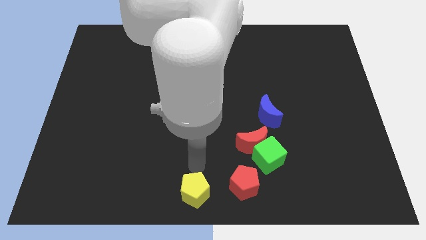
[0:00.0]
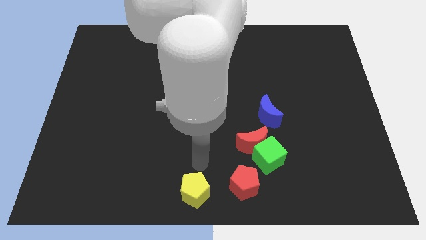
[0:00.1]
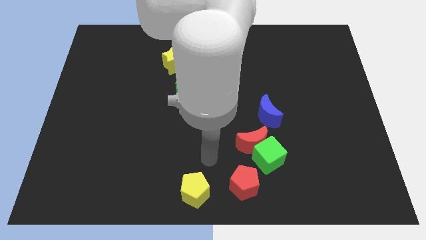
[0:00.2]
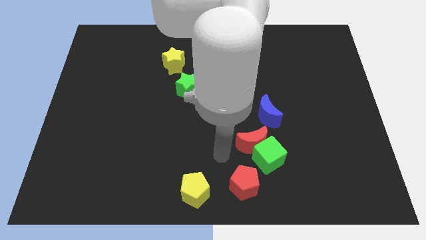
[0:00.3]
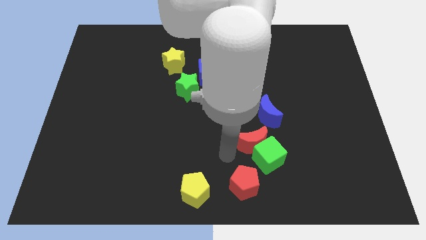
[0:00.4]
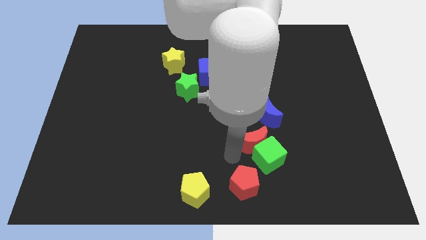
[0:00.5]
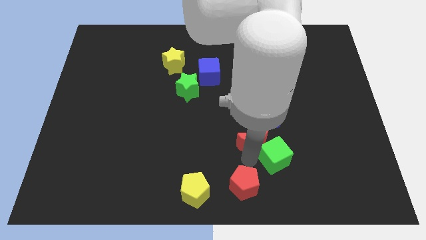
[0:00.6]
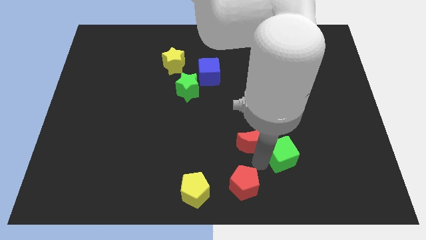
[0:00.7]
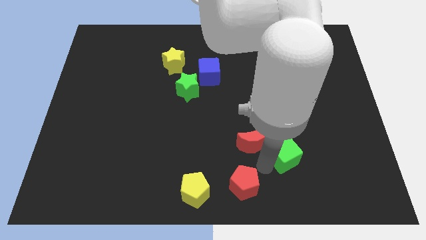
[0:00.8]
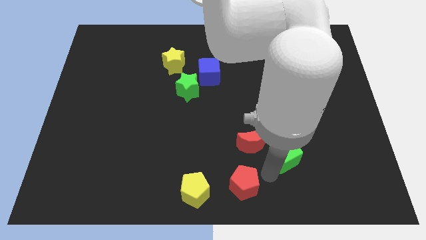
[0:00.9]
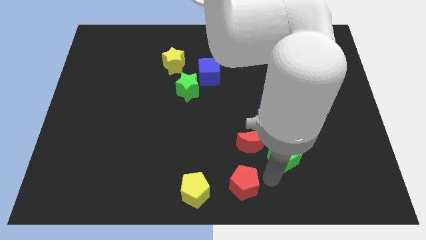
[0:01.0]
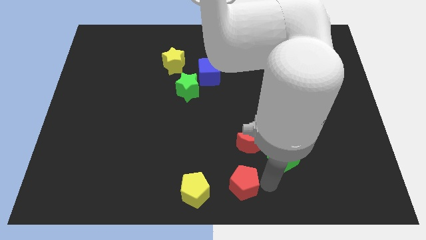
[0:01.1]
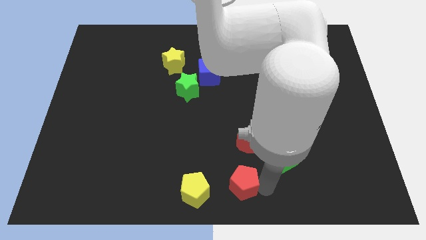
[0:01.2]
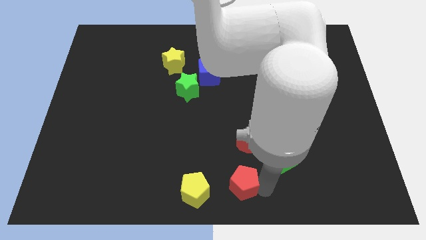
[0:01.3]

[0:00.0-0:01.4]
separate the green cube and red moon

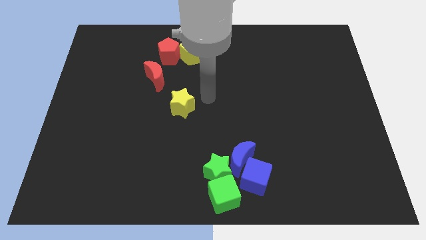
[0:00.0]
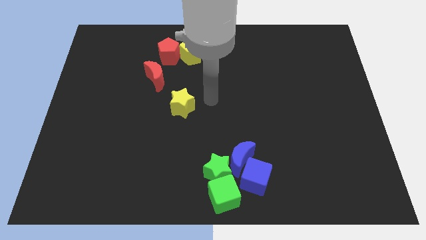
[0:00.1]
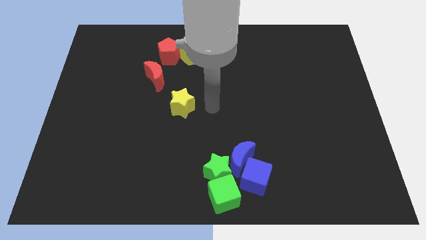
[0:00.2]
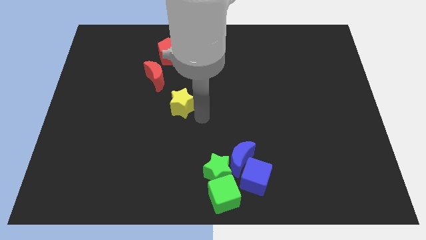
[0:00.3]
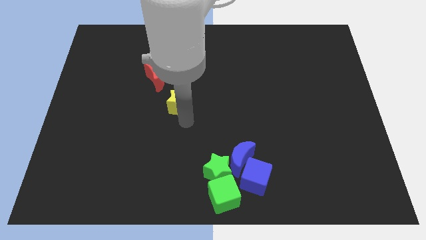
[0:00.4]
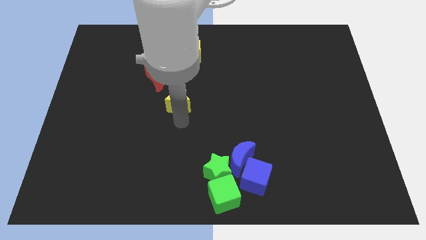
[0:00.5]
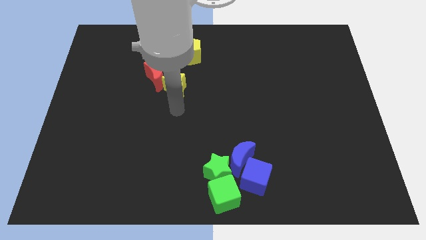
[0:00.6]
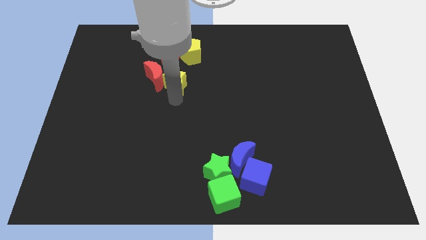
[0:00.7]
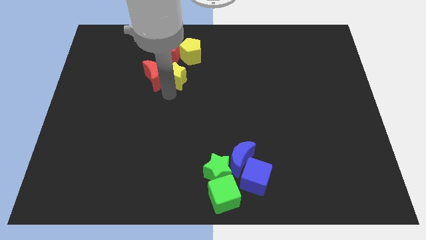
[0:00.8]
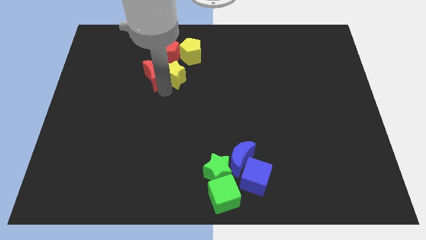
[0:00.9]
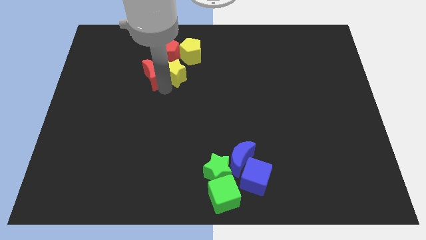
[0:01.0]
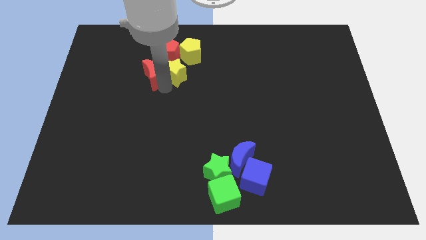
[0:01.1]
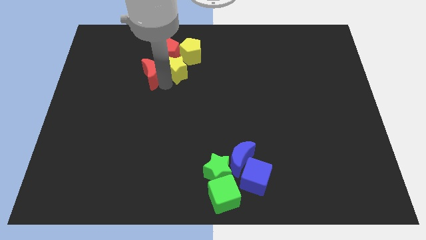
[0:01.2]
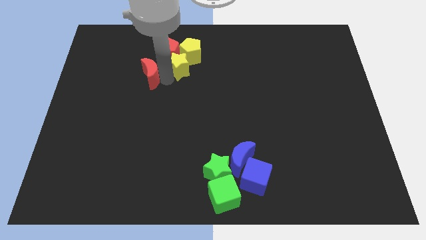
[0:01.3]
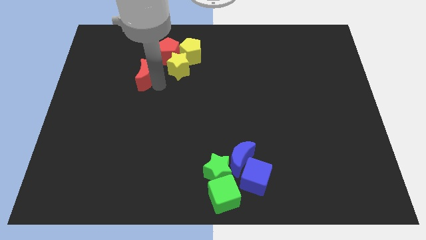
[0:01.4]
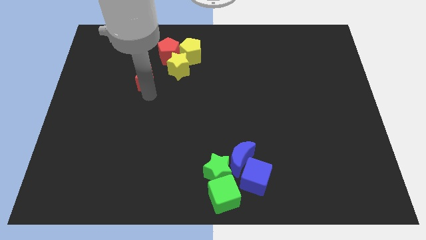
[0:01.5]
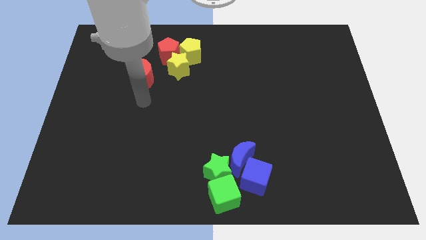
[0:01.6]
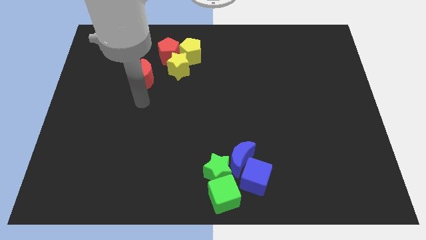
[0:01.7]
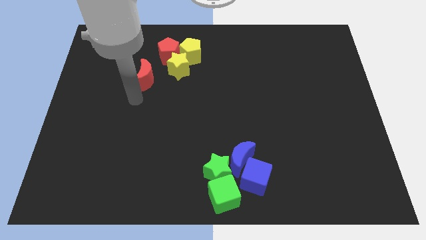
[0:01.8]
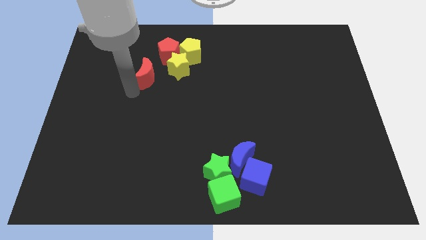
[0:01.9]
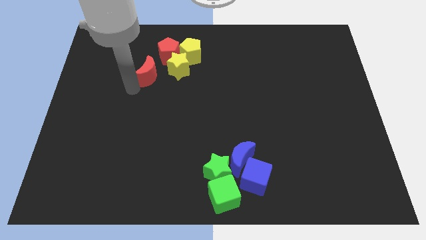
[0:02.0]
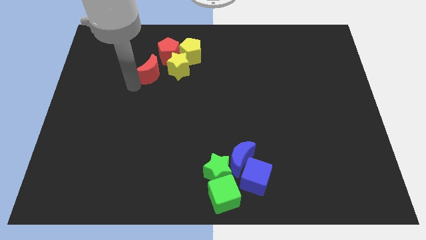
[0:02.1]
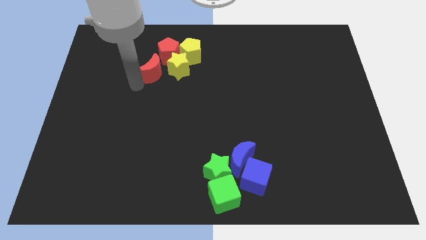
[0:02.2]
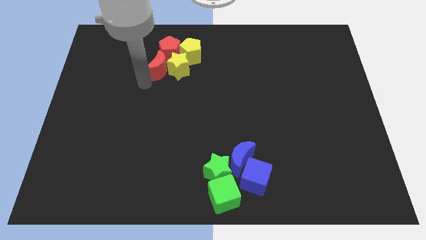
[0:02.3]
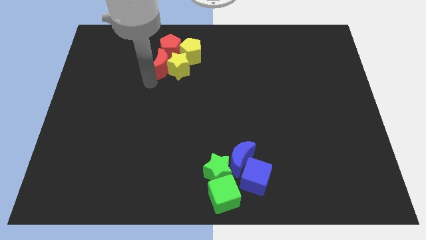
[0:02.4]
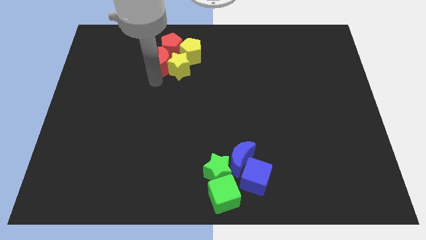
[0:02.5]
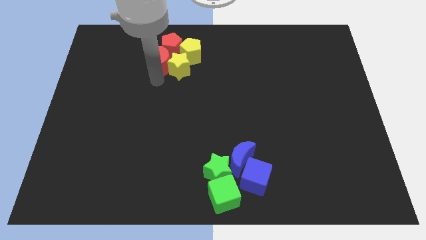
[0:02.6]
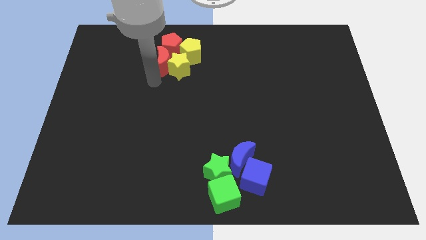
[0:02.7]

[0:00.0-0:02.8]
place the yellow and red blocks together at the top left side of the board

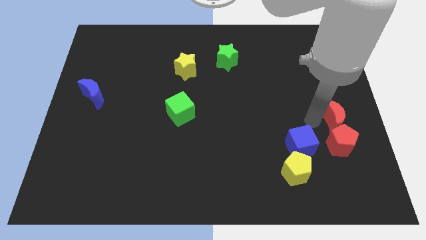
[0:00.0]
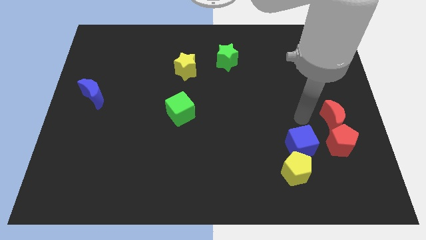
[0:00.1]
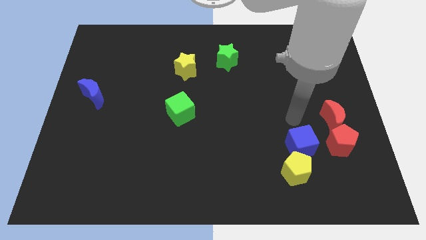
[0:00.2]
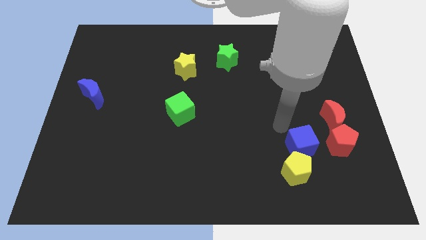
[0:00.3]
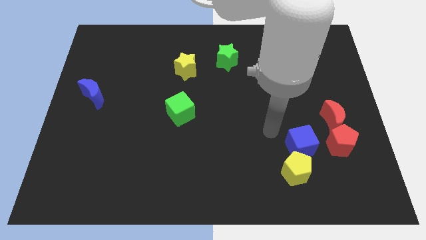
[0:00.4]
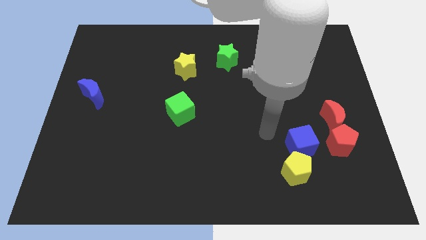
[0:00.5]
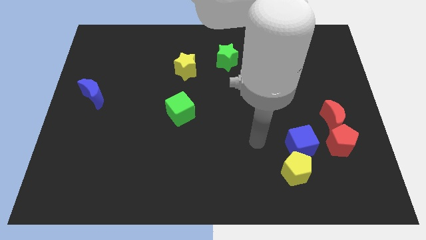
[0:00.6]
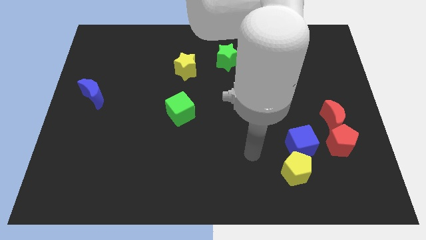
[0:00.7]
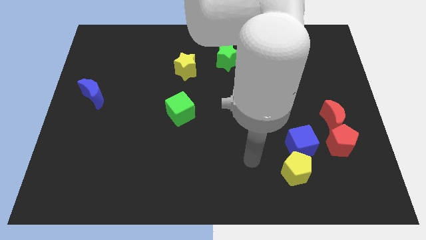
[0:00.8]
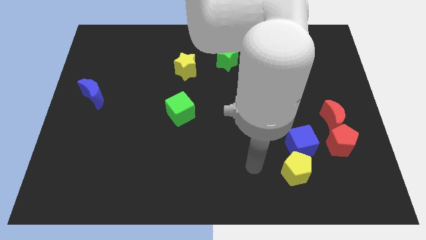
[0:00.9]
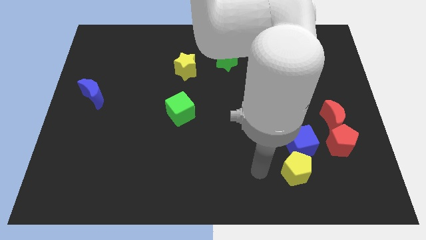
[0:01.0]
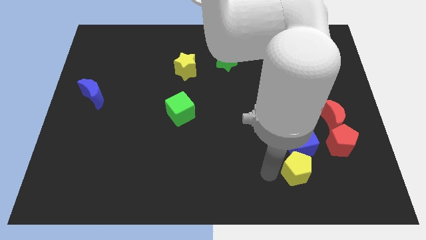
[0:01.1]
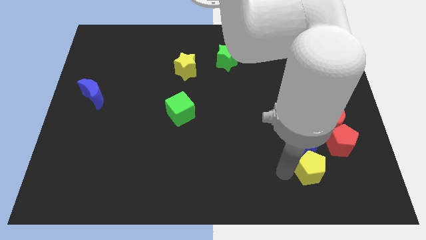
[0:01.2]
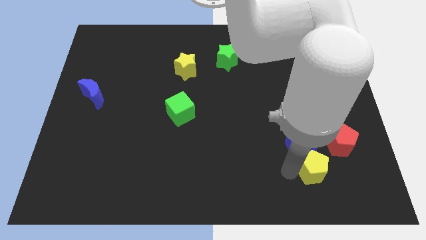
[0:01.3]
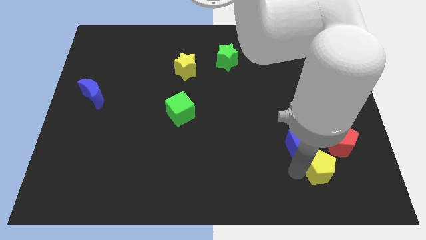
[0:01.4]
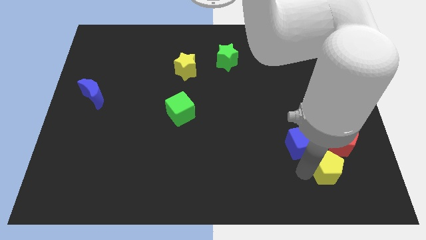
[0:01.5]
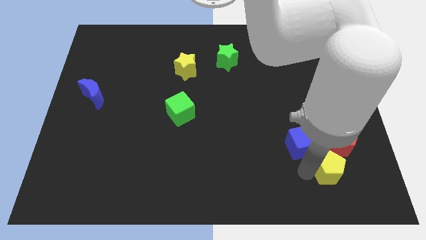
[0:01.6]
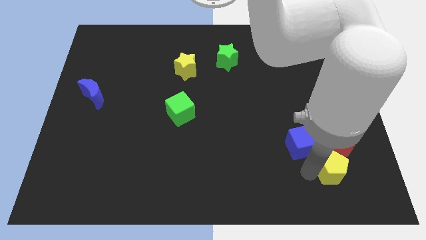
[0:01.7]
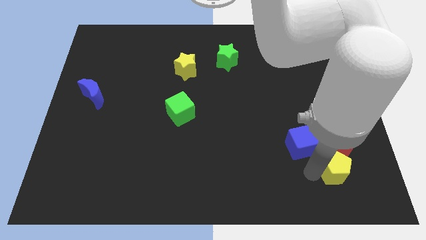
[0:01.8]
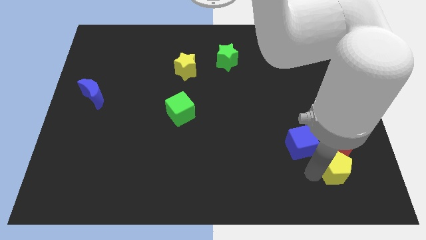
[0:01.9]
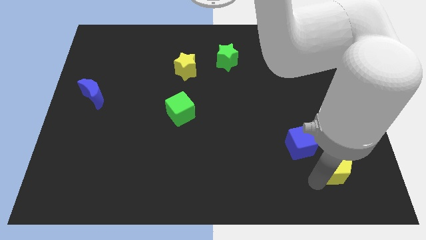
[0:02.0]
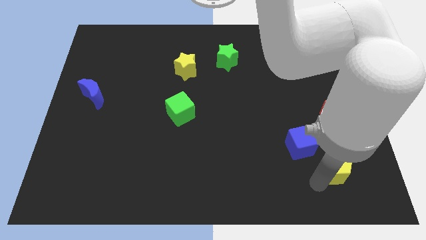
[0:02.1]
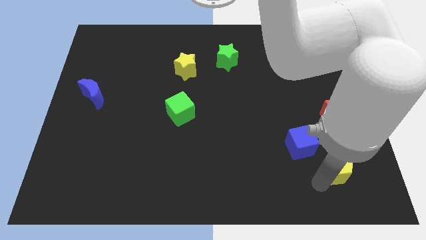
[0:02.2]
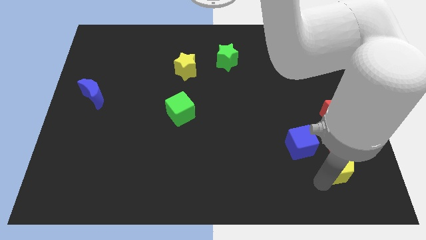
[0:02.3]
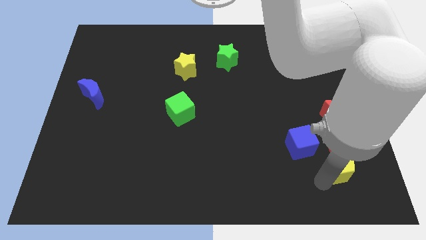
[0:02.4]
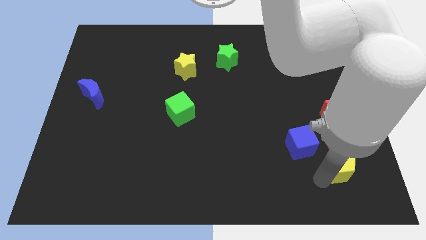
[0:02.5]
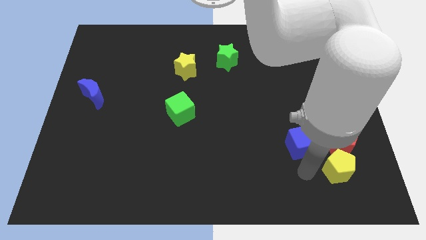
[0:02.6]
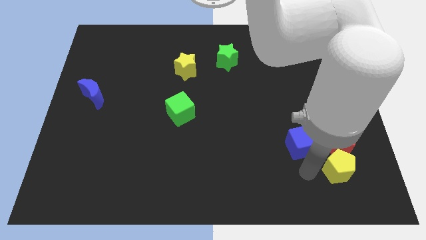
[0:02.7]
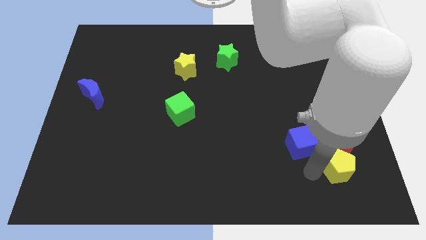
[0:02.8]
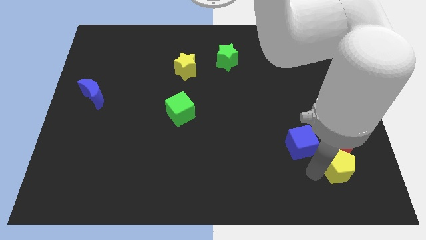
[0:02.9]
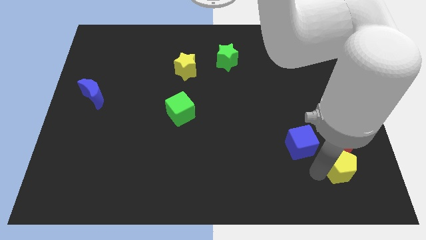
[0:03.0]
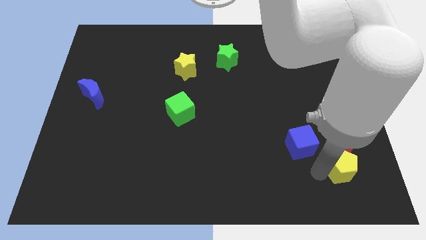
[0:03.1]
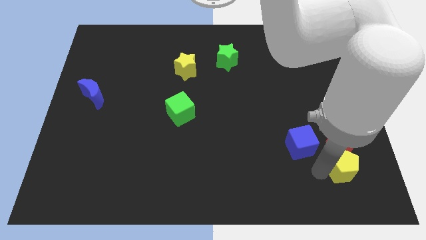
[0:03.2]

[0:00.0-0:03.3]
place the yellow pentagon under the red pentagon

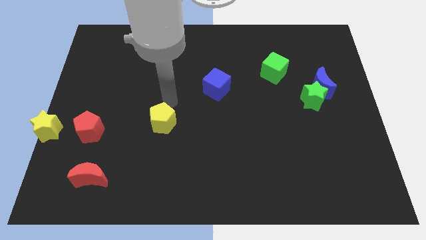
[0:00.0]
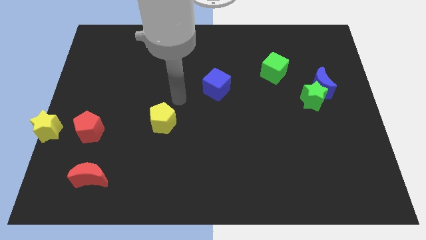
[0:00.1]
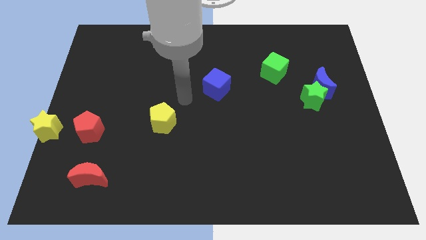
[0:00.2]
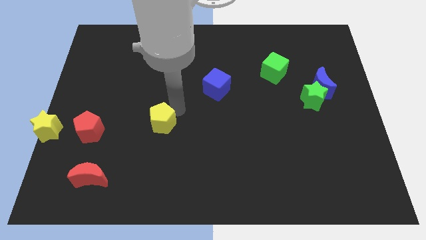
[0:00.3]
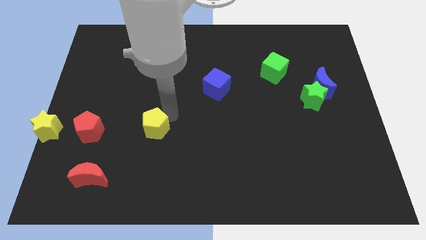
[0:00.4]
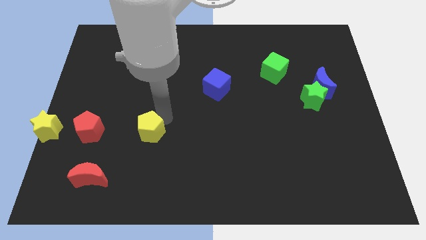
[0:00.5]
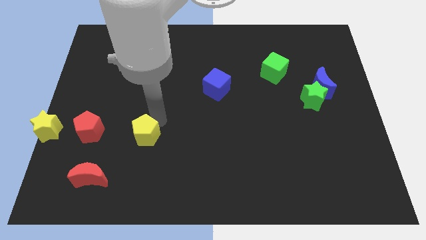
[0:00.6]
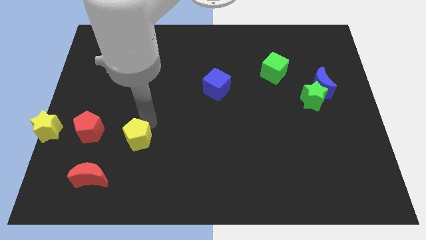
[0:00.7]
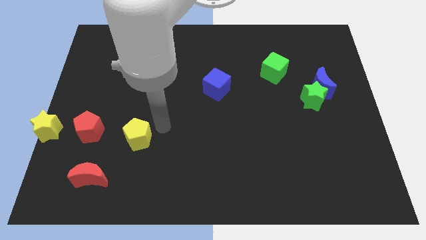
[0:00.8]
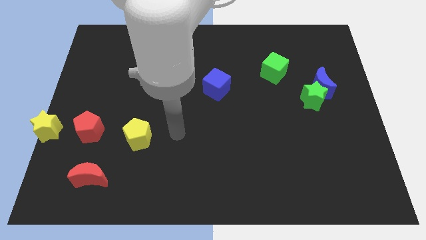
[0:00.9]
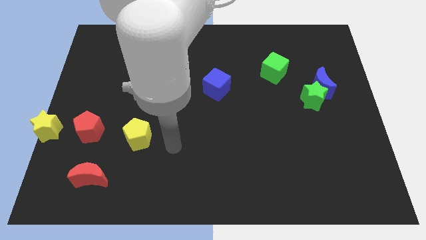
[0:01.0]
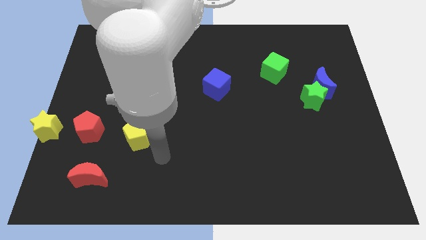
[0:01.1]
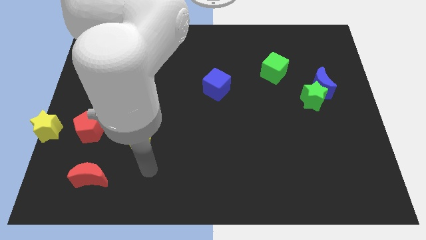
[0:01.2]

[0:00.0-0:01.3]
point your arm below yellow pentagon

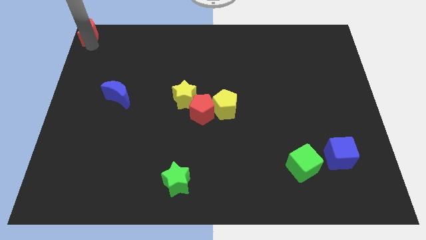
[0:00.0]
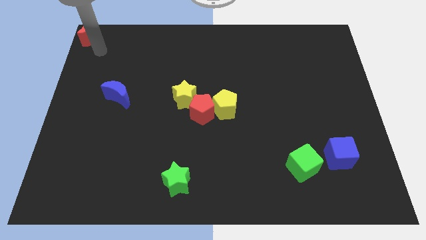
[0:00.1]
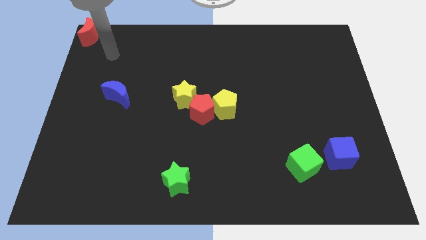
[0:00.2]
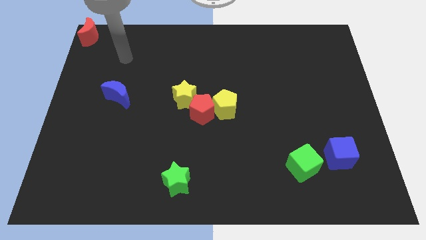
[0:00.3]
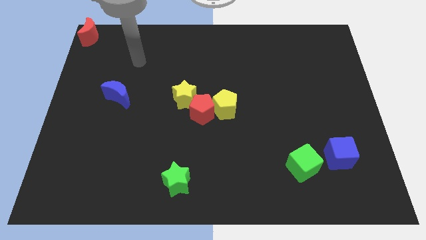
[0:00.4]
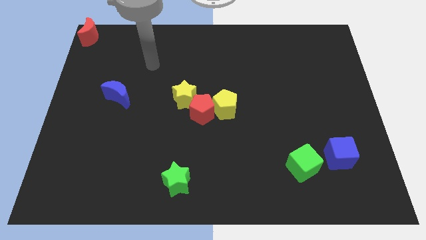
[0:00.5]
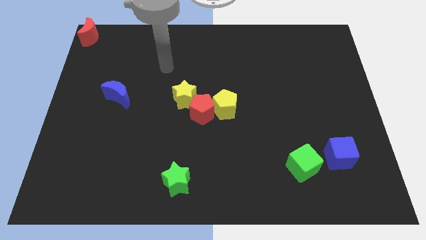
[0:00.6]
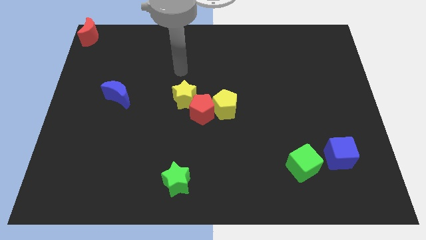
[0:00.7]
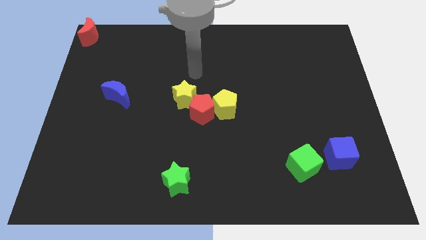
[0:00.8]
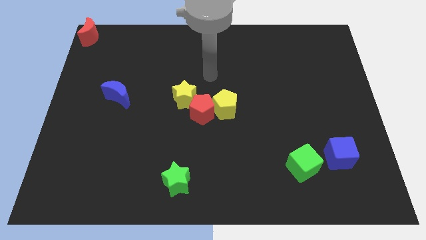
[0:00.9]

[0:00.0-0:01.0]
move your arm away from red moon
